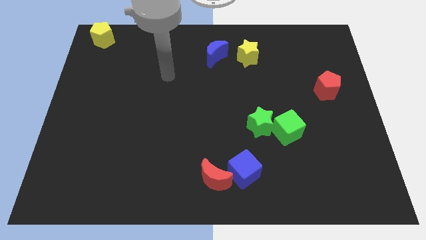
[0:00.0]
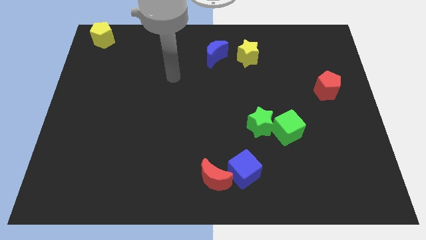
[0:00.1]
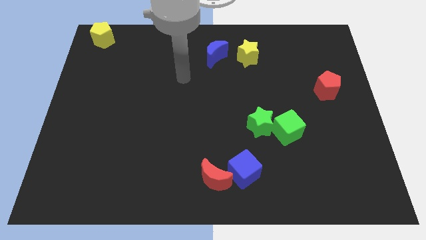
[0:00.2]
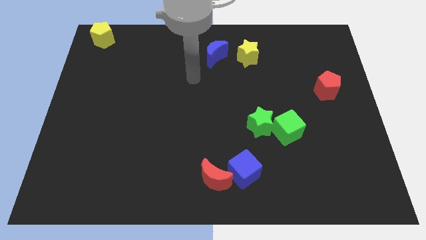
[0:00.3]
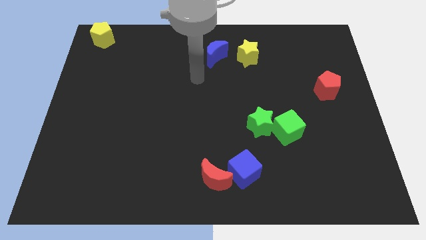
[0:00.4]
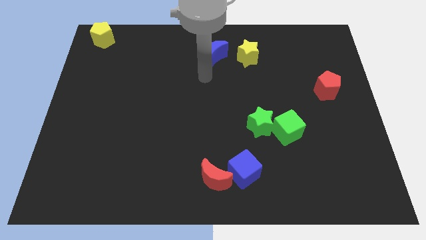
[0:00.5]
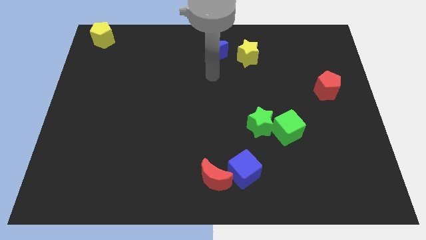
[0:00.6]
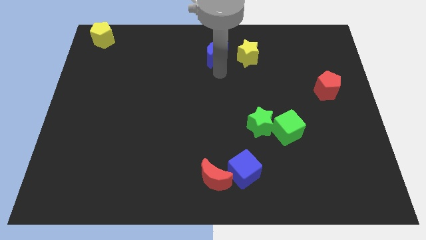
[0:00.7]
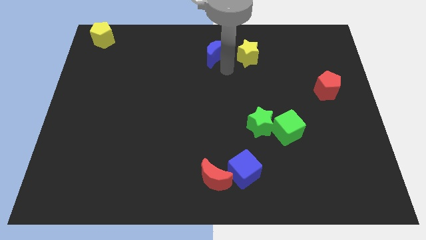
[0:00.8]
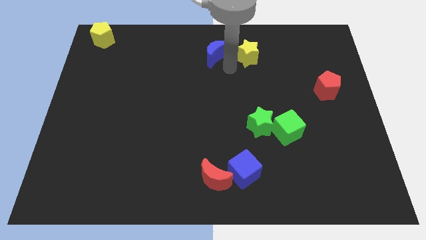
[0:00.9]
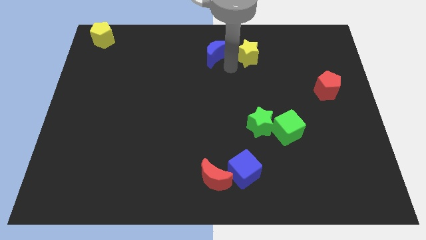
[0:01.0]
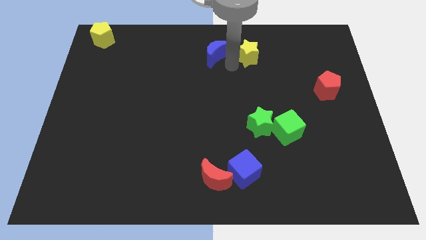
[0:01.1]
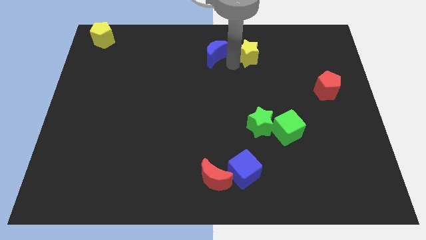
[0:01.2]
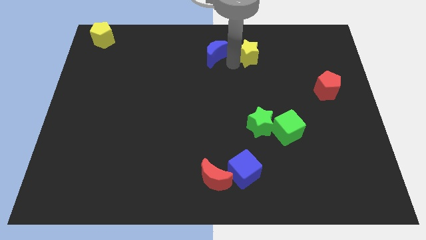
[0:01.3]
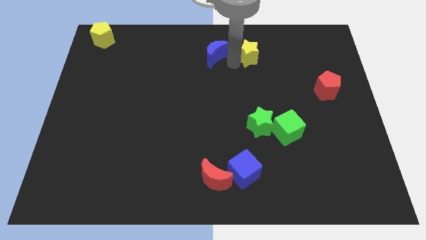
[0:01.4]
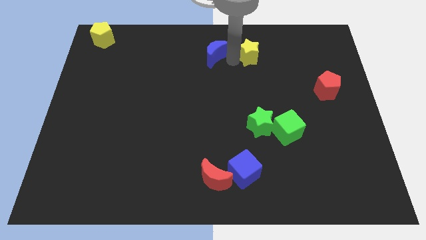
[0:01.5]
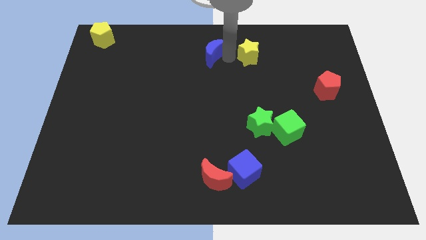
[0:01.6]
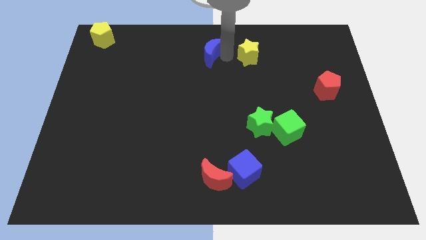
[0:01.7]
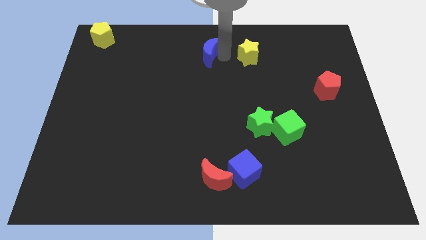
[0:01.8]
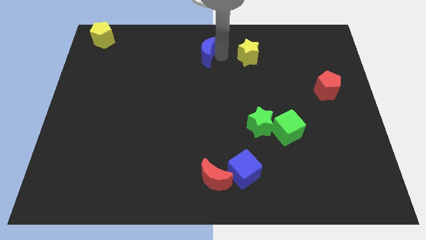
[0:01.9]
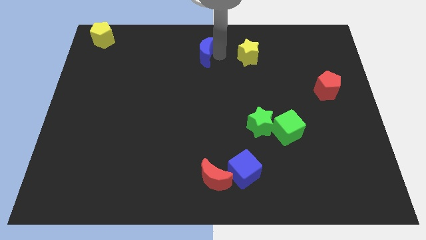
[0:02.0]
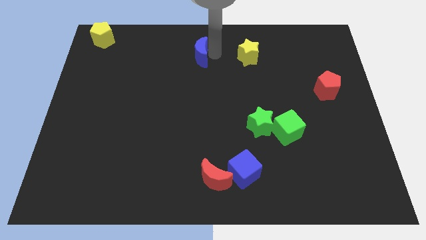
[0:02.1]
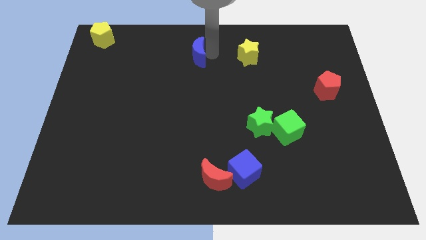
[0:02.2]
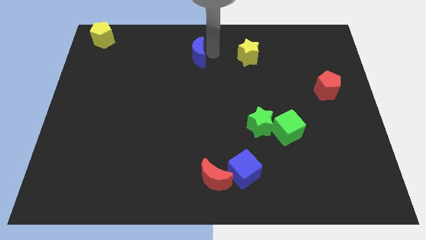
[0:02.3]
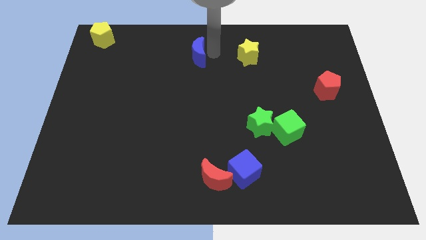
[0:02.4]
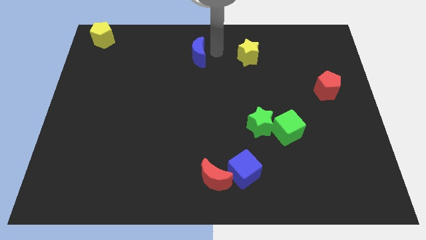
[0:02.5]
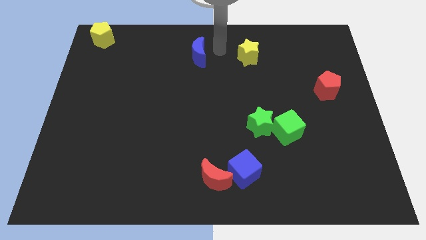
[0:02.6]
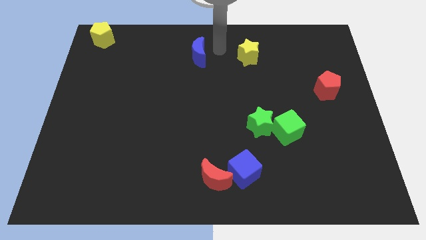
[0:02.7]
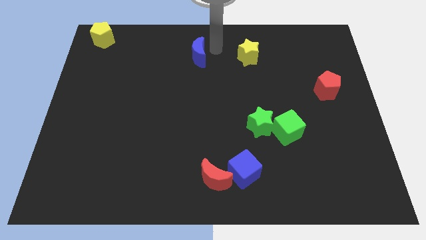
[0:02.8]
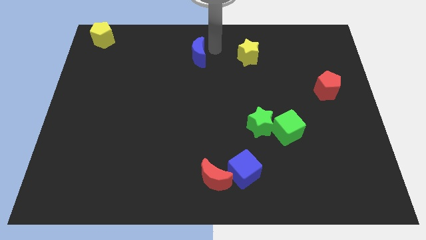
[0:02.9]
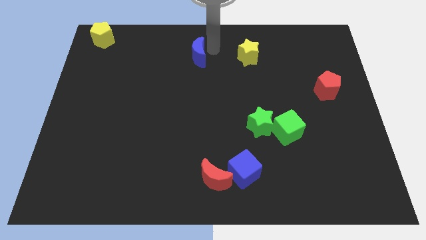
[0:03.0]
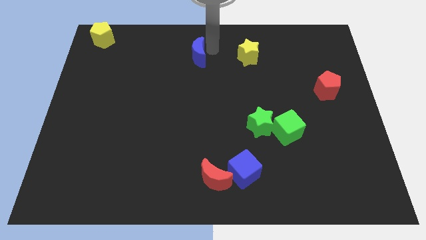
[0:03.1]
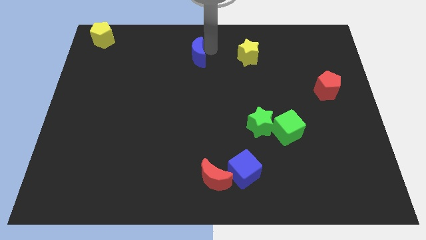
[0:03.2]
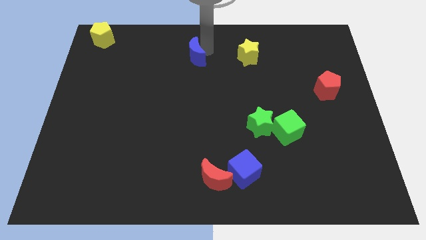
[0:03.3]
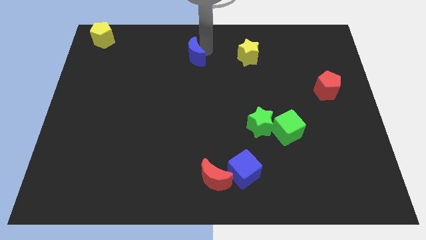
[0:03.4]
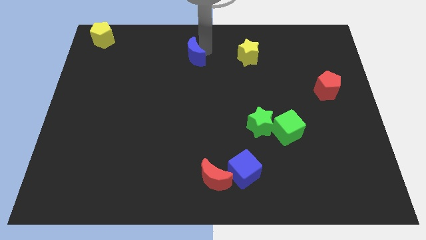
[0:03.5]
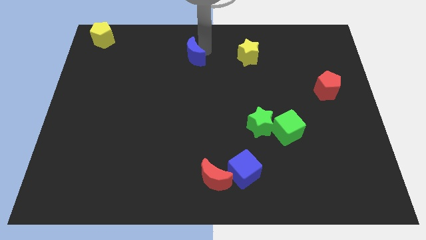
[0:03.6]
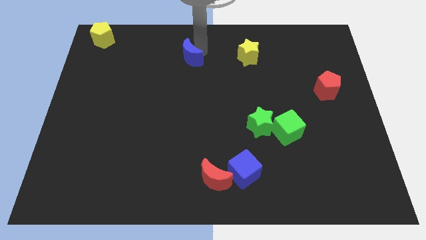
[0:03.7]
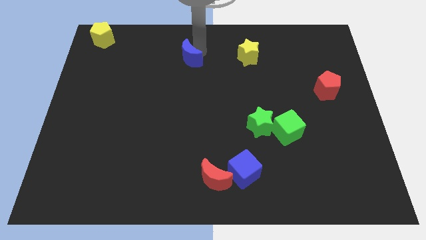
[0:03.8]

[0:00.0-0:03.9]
separate blue moon and yellow star

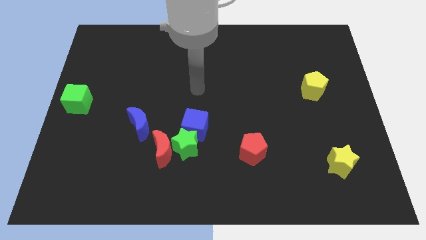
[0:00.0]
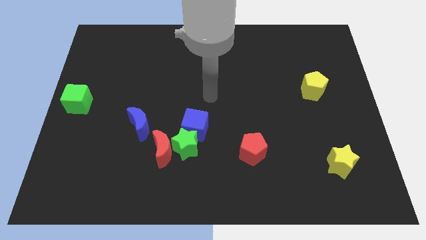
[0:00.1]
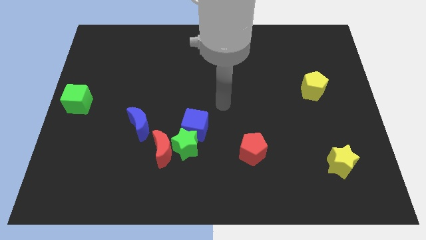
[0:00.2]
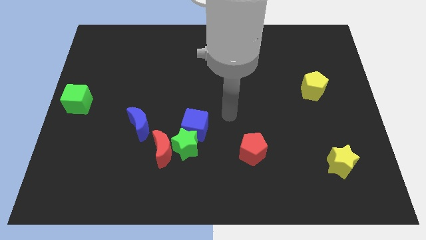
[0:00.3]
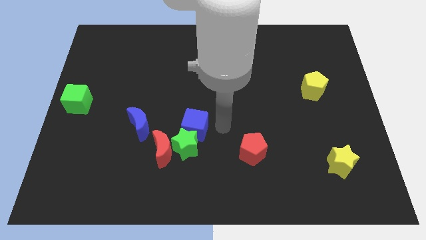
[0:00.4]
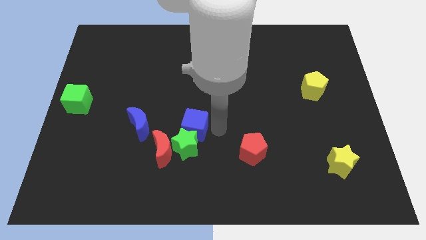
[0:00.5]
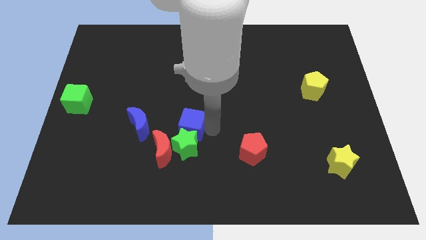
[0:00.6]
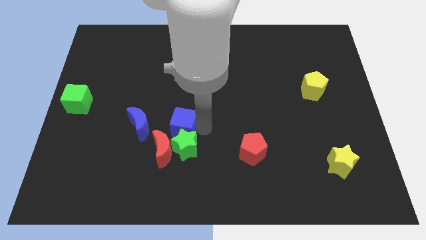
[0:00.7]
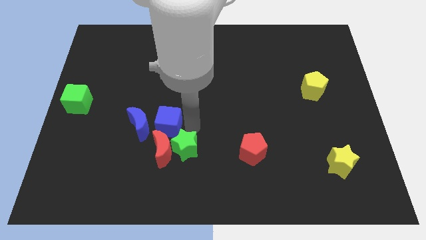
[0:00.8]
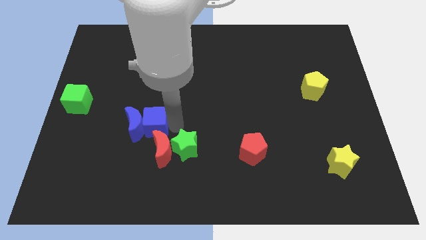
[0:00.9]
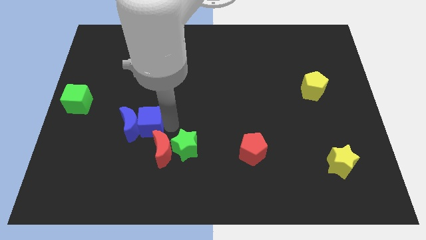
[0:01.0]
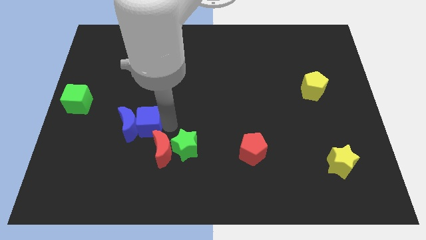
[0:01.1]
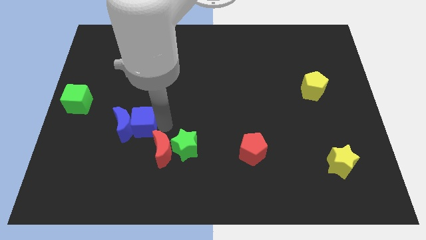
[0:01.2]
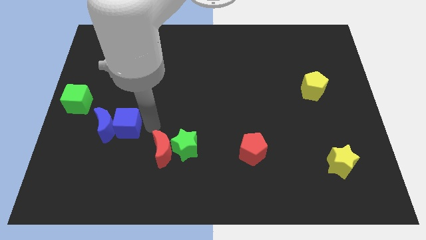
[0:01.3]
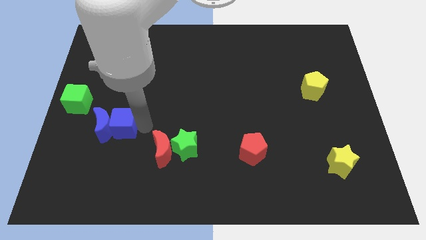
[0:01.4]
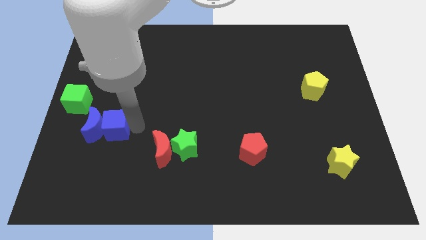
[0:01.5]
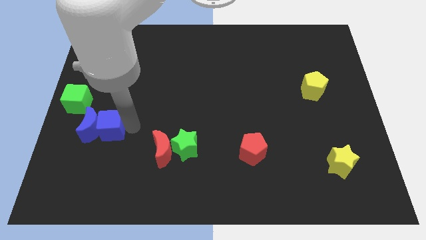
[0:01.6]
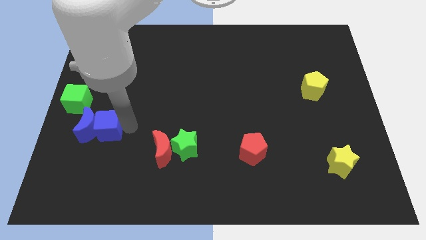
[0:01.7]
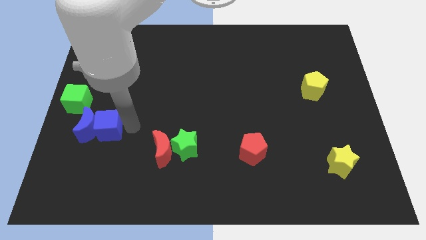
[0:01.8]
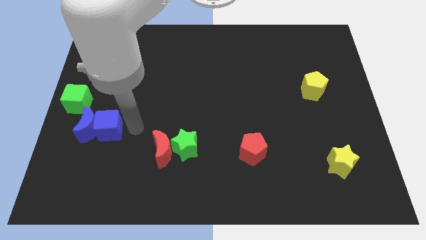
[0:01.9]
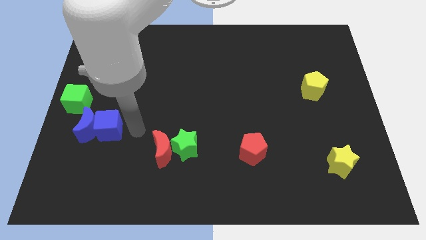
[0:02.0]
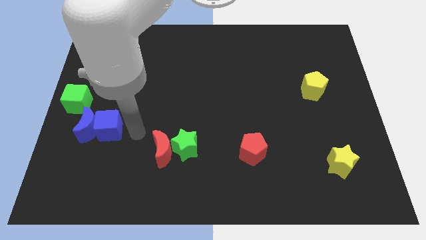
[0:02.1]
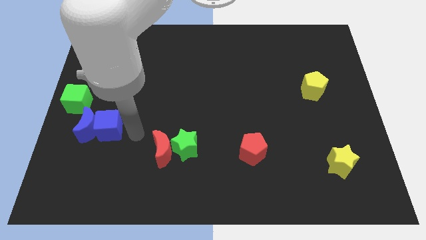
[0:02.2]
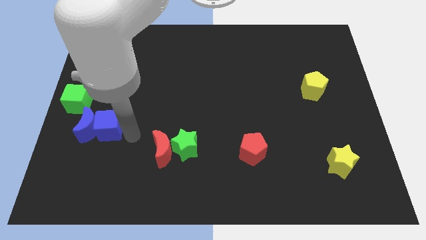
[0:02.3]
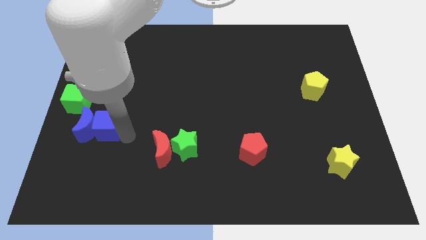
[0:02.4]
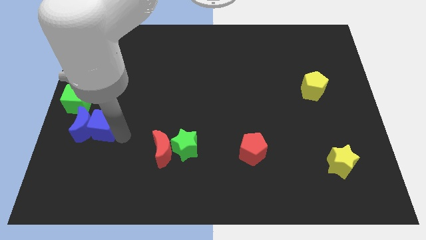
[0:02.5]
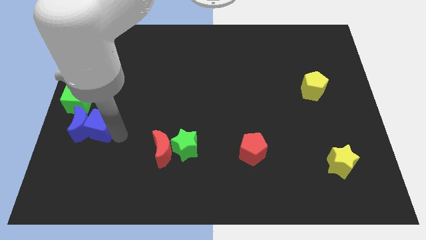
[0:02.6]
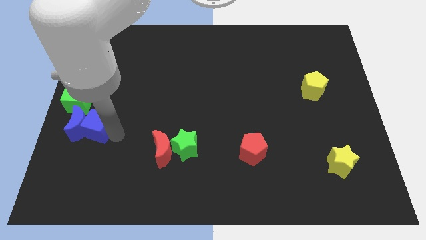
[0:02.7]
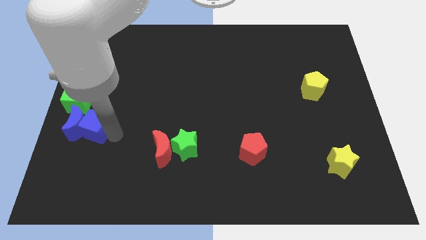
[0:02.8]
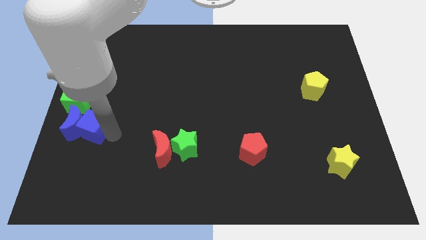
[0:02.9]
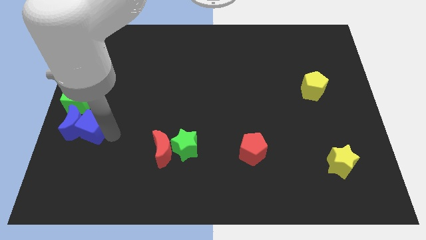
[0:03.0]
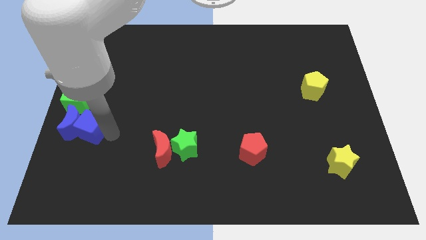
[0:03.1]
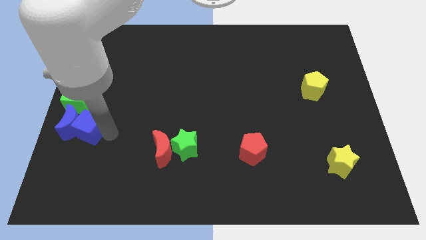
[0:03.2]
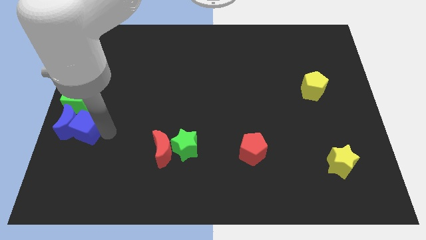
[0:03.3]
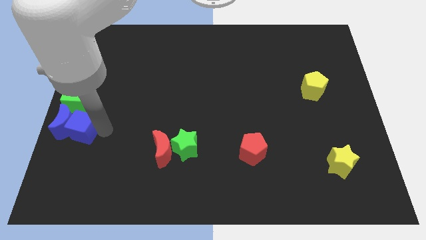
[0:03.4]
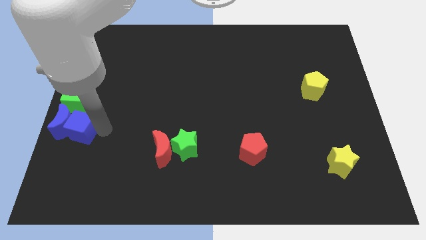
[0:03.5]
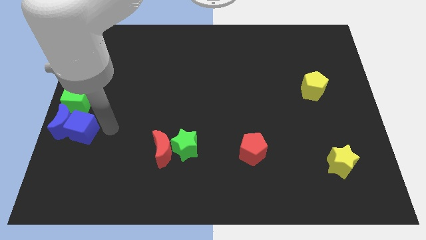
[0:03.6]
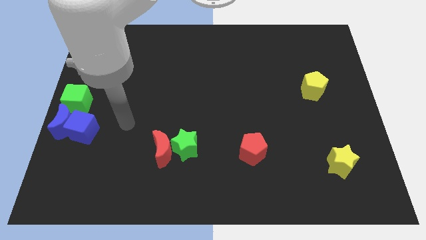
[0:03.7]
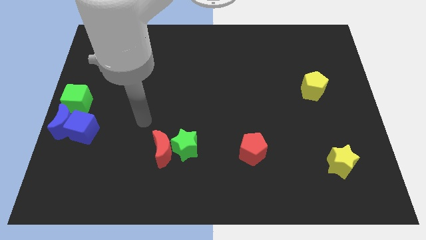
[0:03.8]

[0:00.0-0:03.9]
push the blue cube along with the blue crescent to the bottom of the green cube

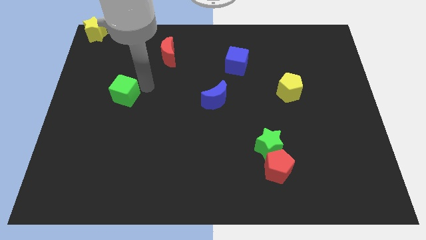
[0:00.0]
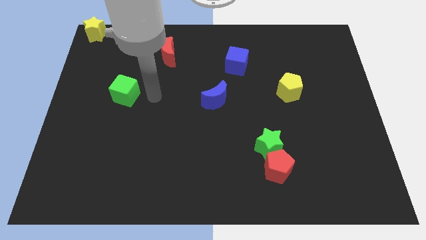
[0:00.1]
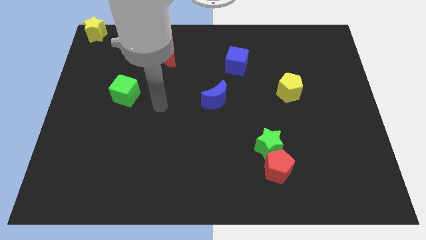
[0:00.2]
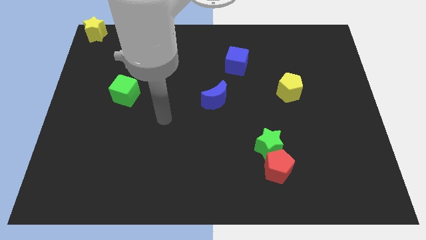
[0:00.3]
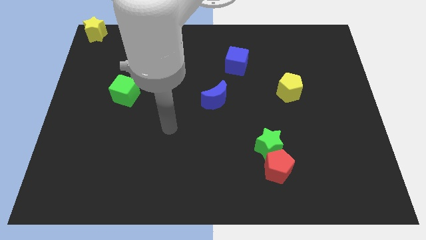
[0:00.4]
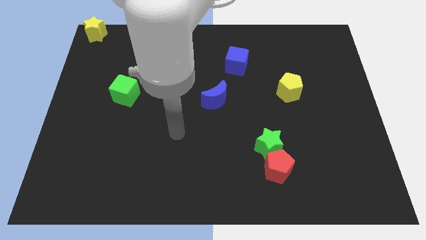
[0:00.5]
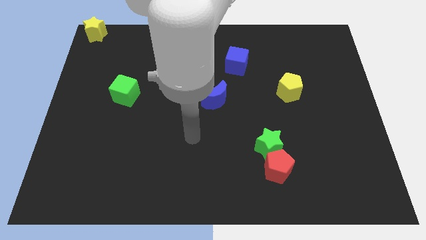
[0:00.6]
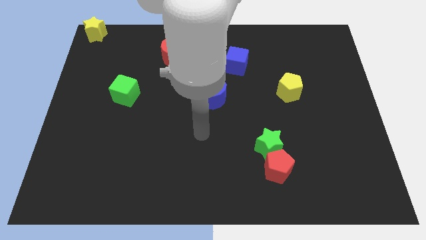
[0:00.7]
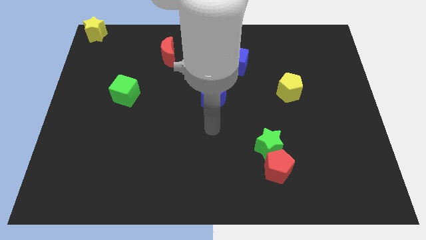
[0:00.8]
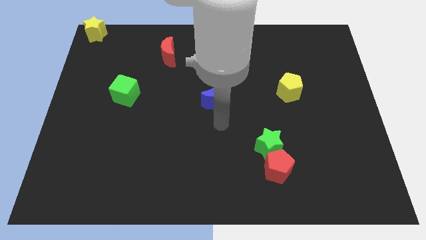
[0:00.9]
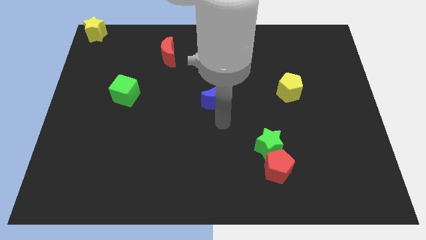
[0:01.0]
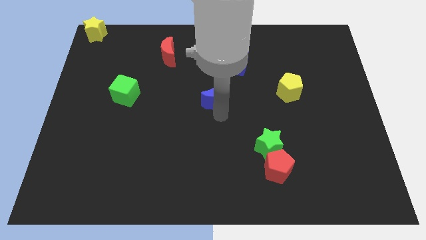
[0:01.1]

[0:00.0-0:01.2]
place the arm down to the blue moon

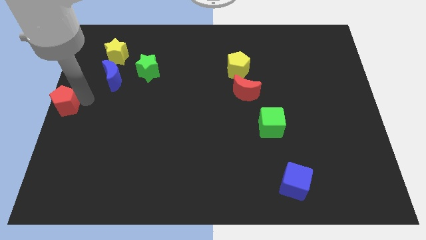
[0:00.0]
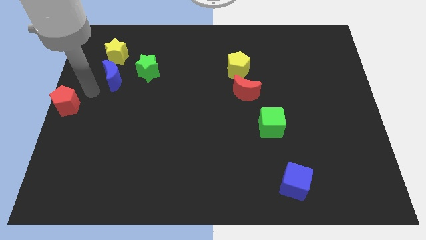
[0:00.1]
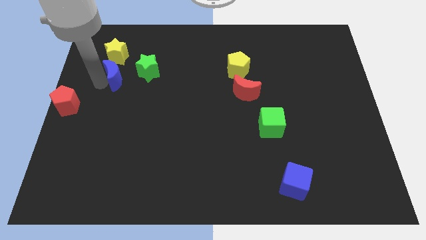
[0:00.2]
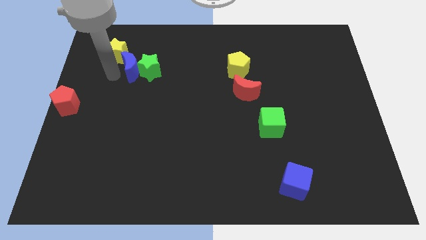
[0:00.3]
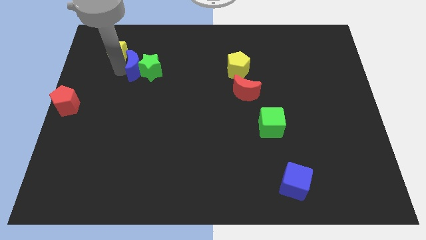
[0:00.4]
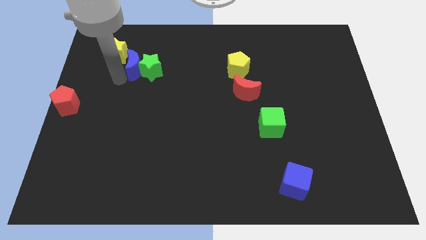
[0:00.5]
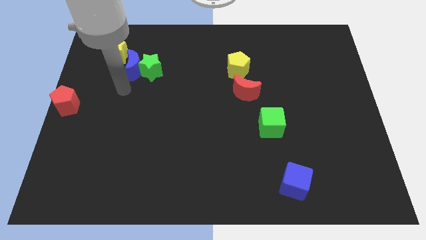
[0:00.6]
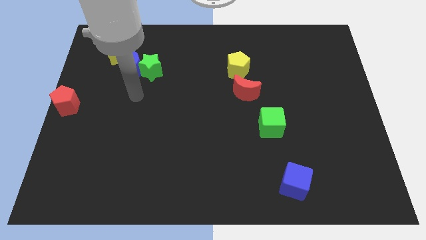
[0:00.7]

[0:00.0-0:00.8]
make the blue crescent to touch the left side of the green star
